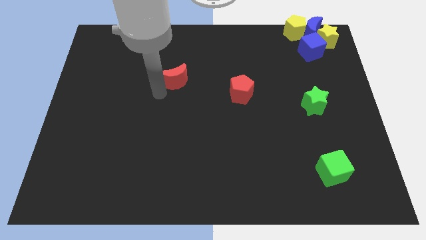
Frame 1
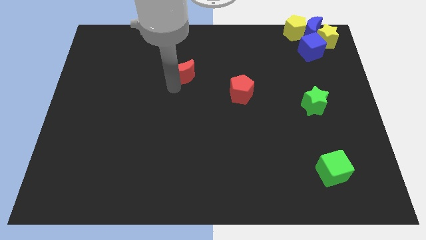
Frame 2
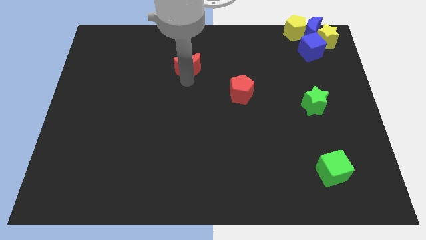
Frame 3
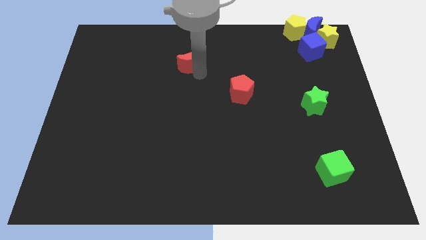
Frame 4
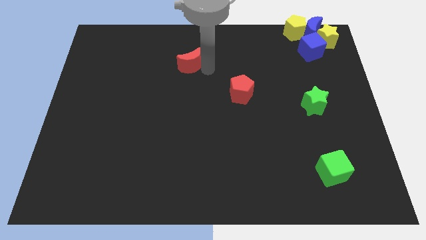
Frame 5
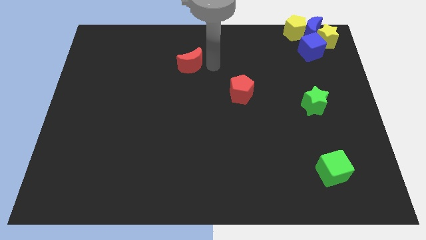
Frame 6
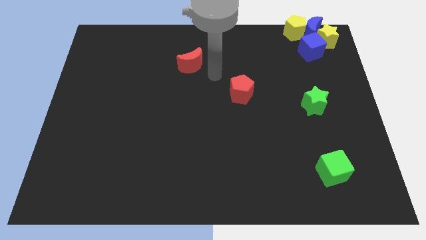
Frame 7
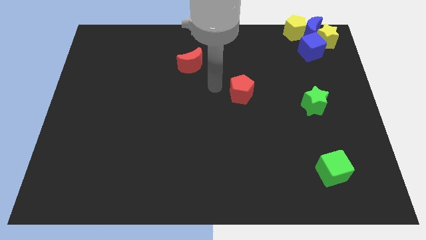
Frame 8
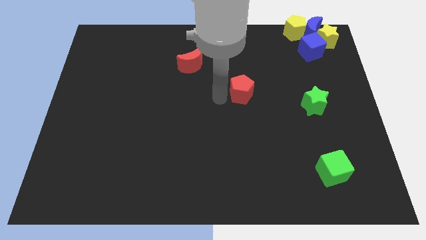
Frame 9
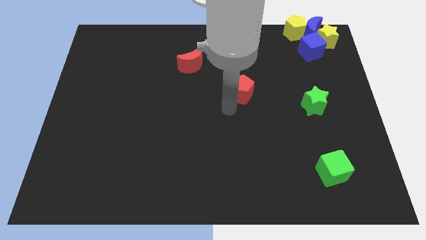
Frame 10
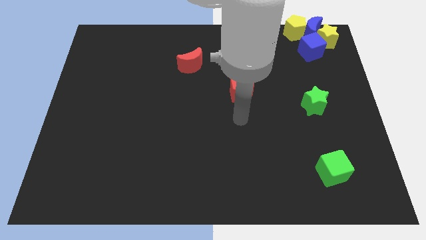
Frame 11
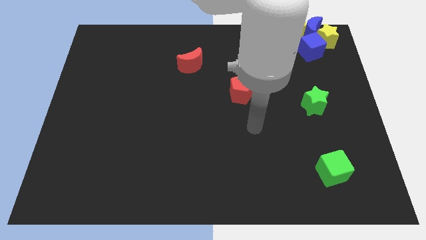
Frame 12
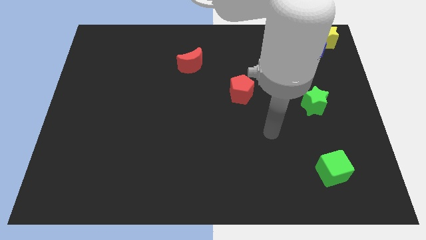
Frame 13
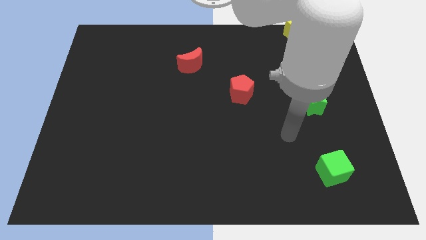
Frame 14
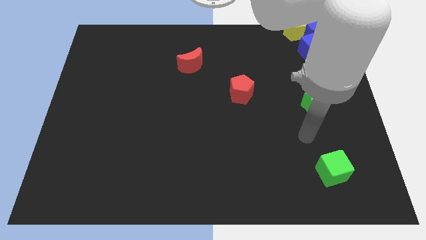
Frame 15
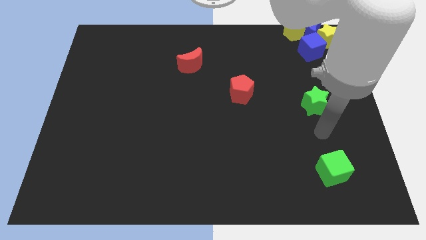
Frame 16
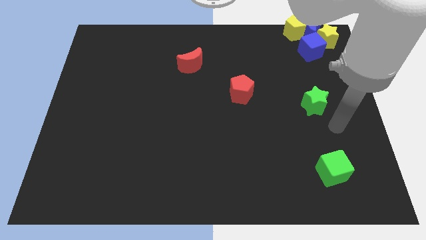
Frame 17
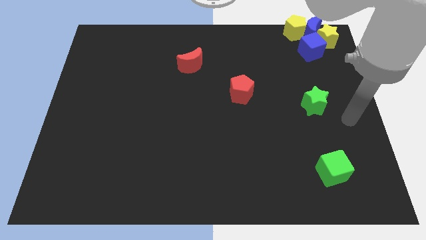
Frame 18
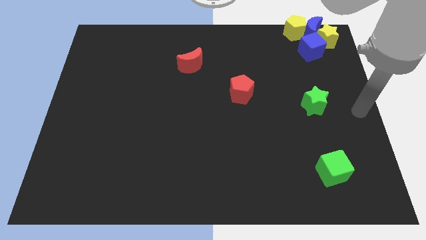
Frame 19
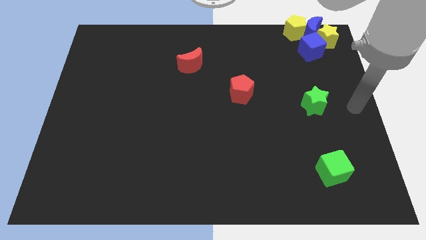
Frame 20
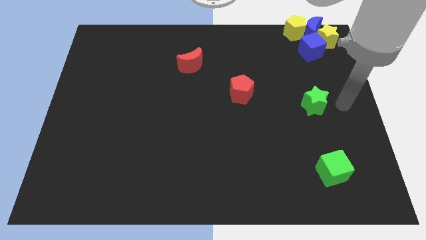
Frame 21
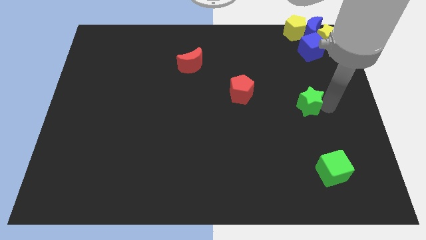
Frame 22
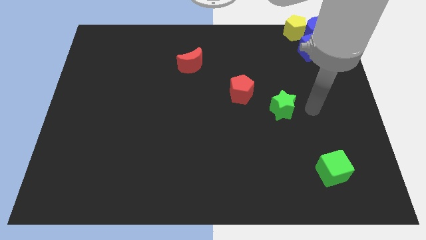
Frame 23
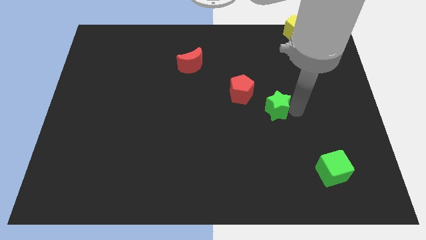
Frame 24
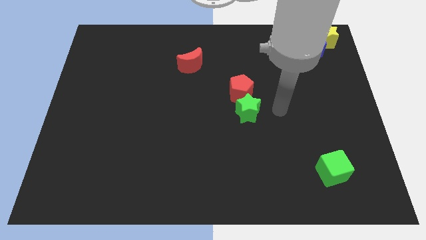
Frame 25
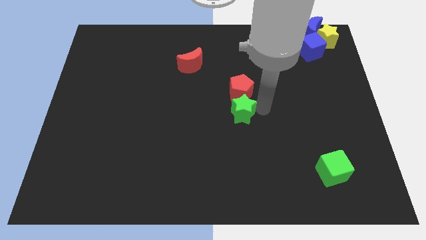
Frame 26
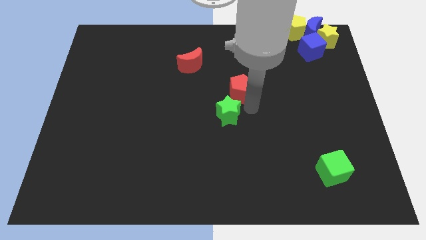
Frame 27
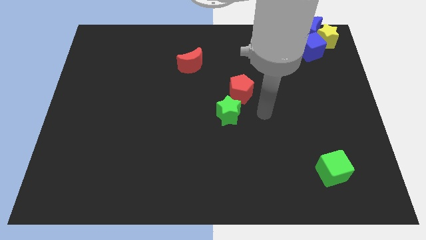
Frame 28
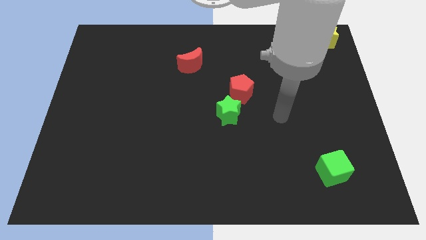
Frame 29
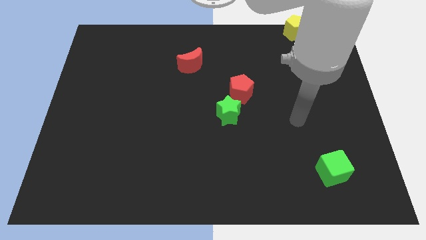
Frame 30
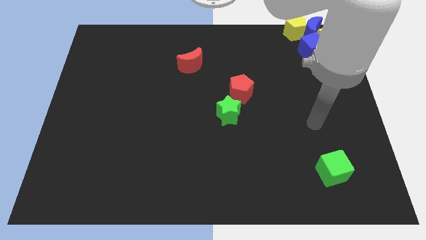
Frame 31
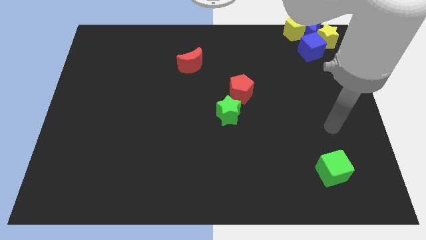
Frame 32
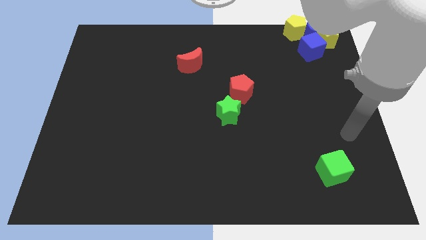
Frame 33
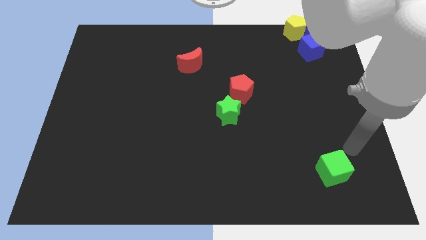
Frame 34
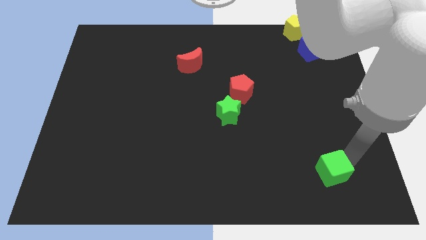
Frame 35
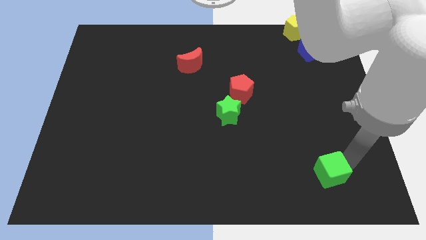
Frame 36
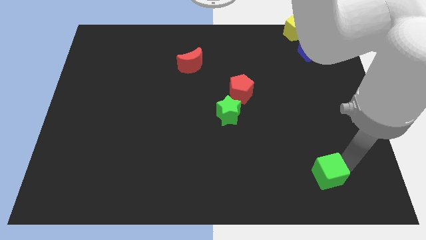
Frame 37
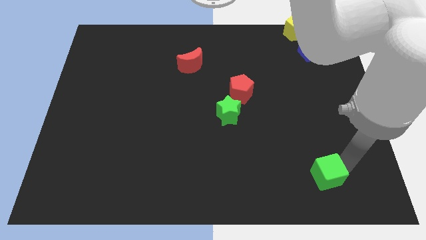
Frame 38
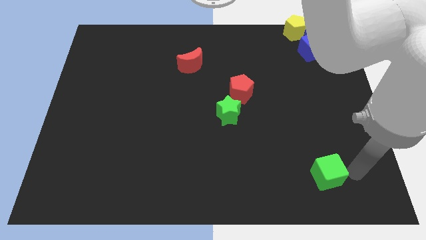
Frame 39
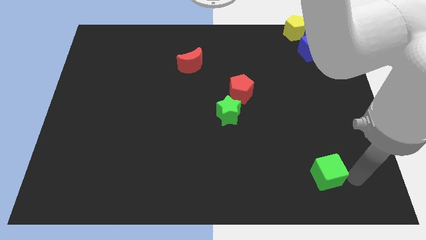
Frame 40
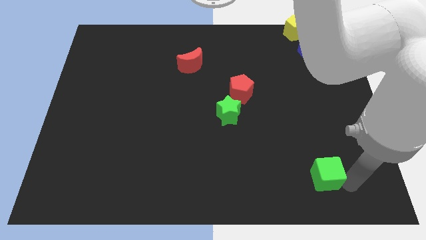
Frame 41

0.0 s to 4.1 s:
place the green star diagonal to the red pentagon
